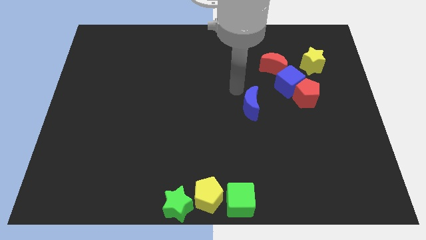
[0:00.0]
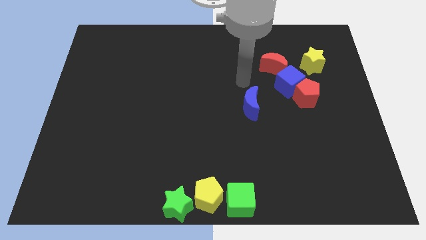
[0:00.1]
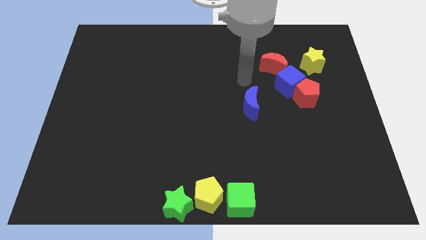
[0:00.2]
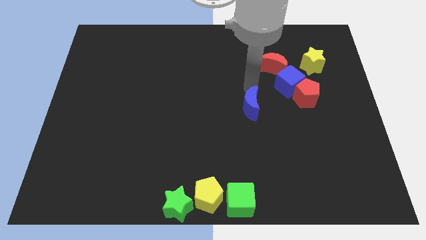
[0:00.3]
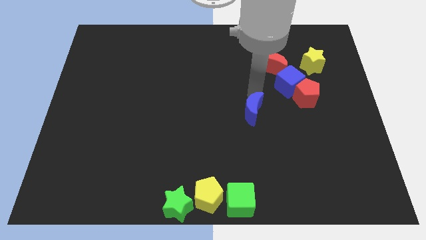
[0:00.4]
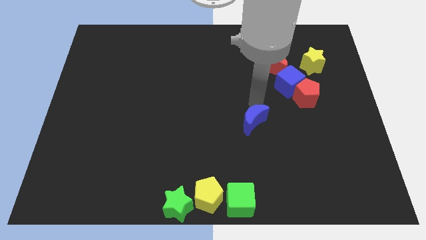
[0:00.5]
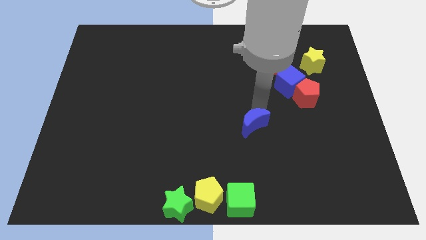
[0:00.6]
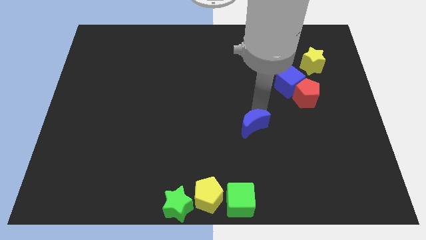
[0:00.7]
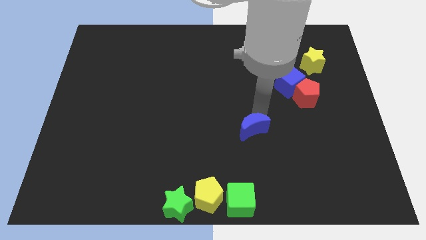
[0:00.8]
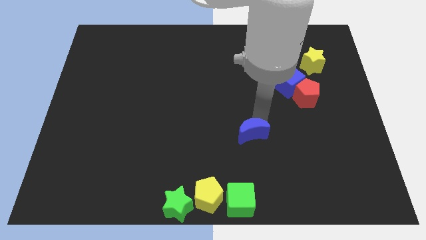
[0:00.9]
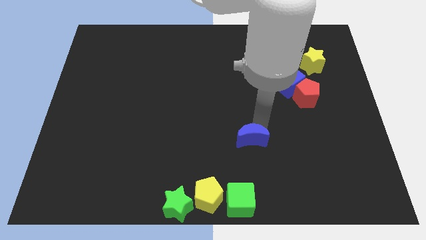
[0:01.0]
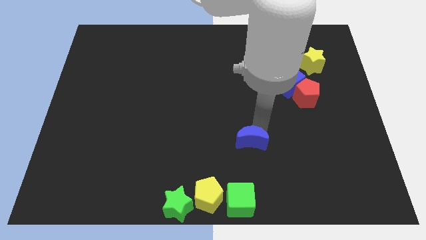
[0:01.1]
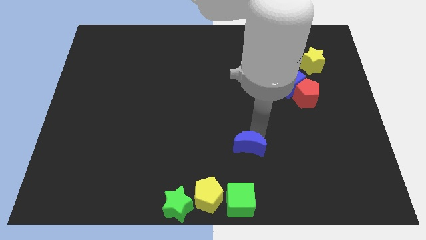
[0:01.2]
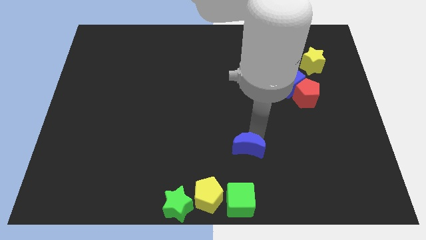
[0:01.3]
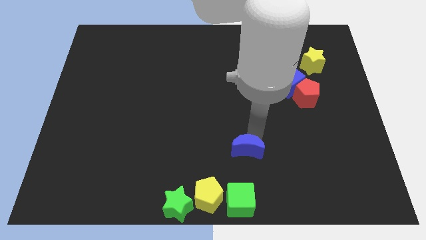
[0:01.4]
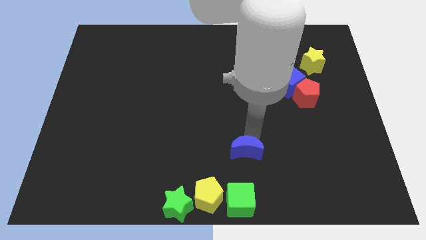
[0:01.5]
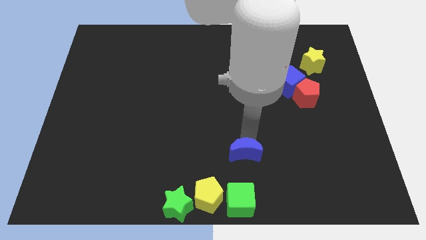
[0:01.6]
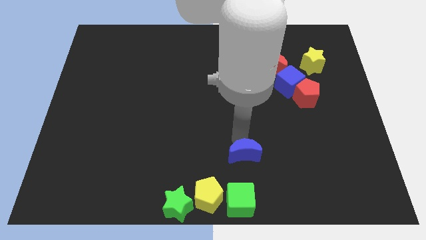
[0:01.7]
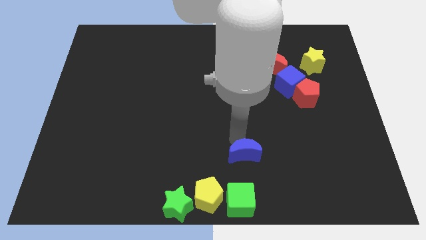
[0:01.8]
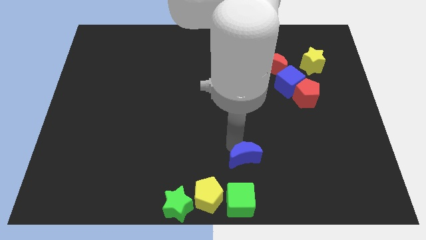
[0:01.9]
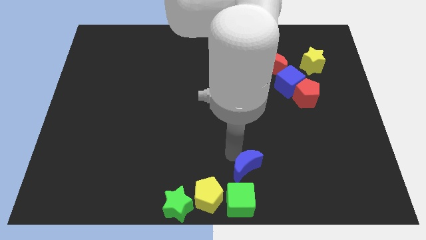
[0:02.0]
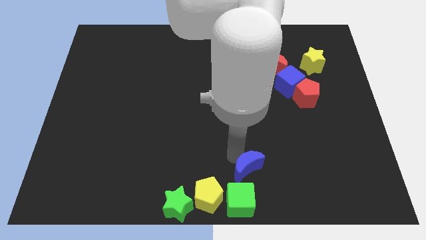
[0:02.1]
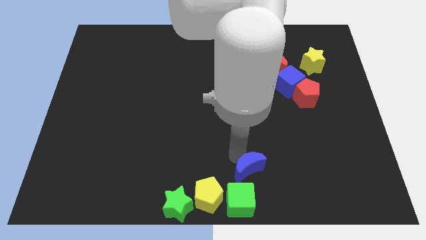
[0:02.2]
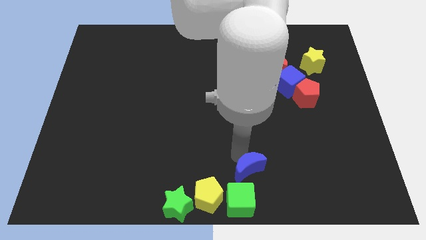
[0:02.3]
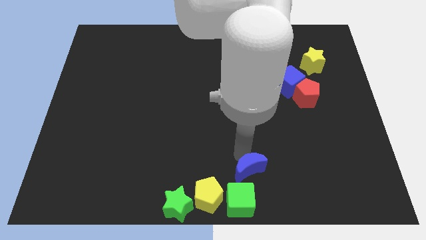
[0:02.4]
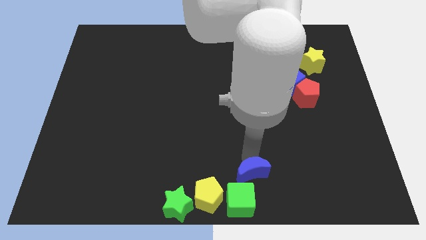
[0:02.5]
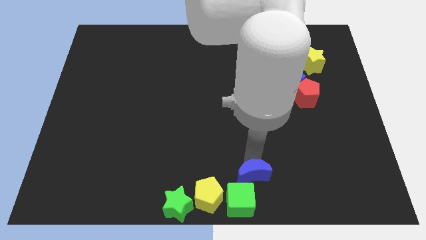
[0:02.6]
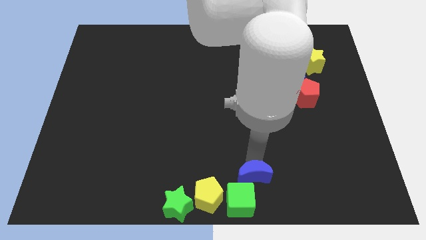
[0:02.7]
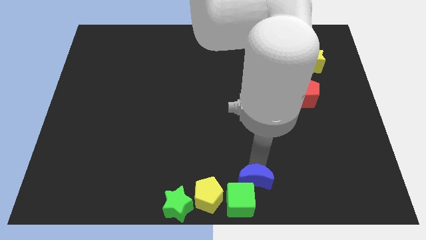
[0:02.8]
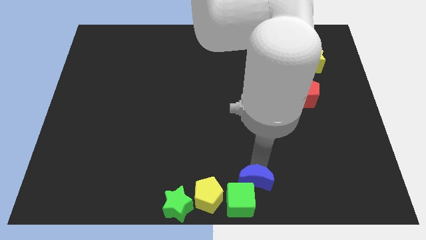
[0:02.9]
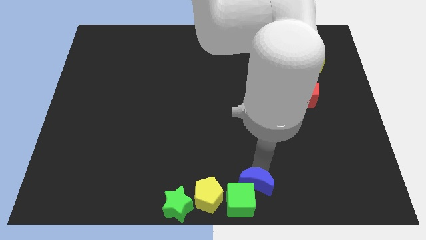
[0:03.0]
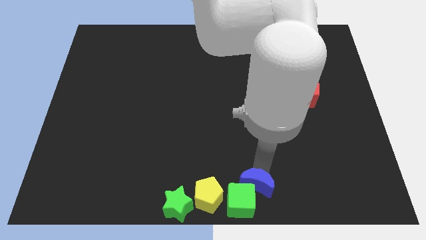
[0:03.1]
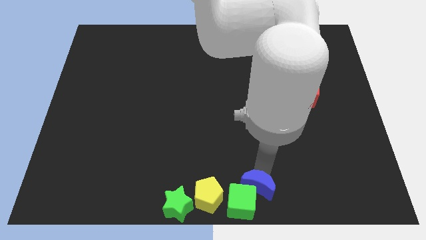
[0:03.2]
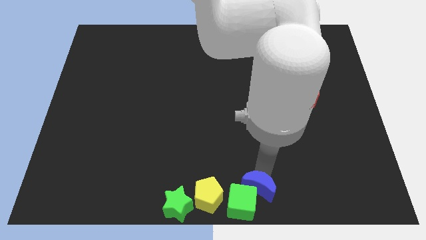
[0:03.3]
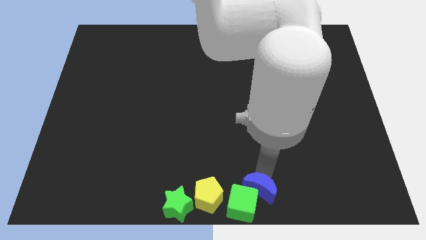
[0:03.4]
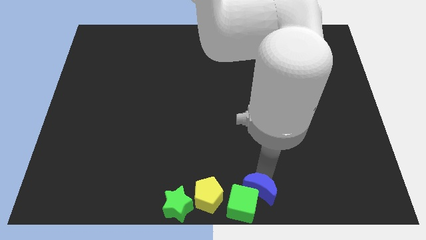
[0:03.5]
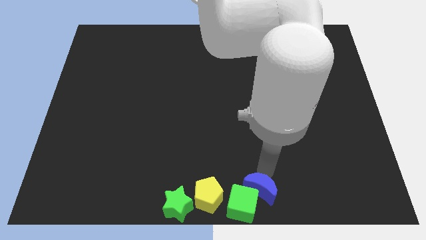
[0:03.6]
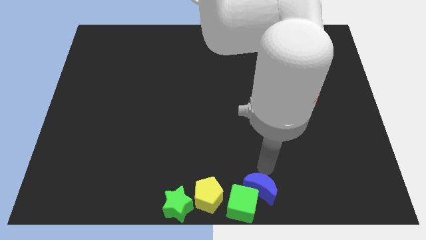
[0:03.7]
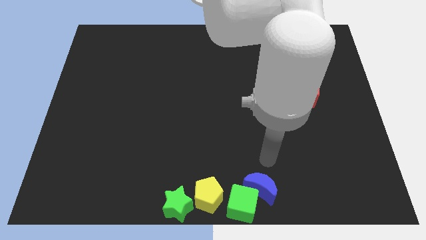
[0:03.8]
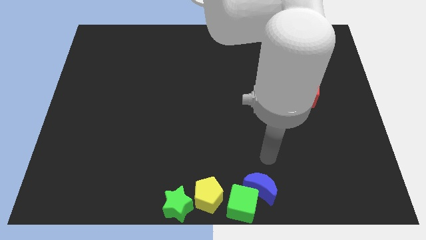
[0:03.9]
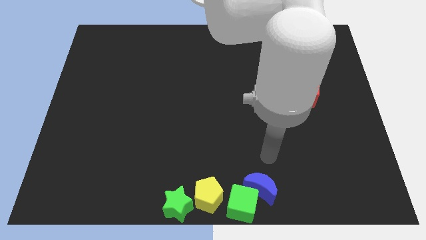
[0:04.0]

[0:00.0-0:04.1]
slide the blue moon into the green cube

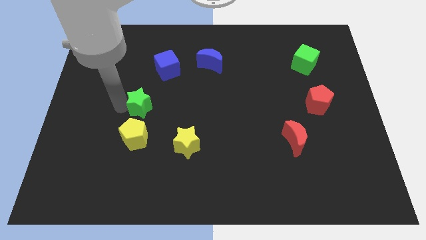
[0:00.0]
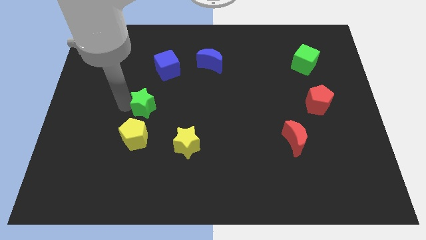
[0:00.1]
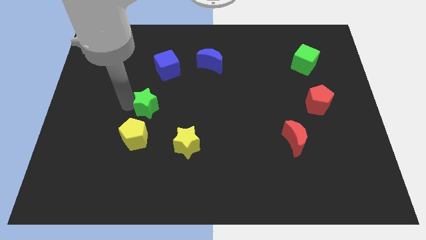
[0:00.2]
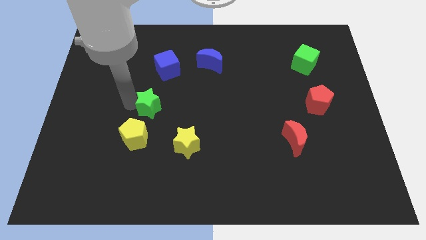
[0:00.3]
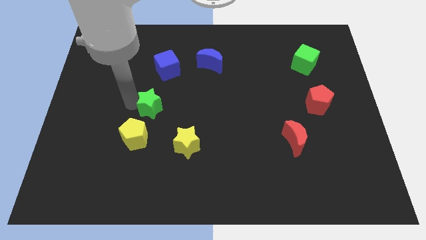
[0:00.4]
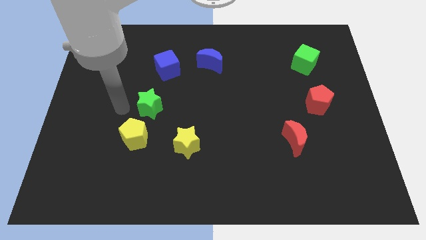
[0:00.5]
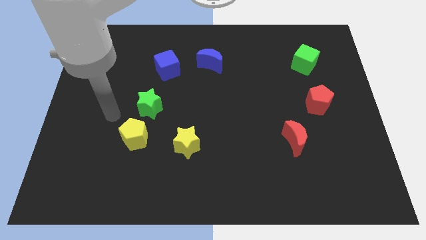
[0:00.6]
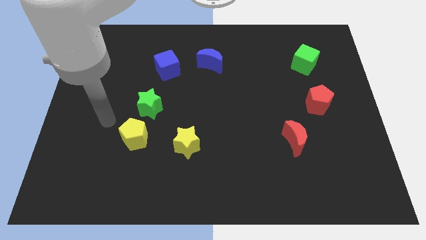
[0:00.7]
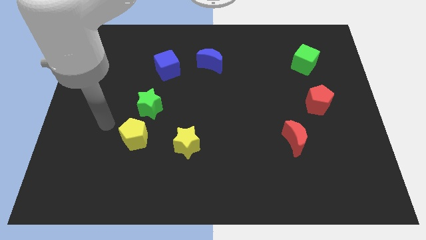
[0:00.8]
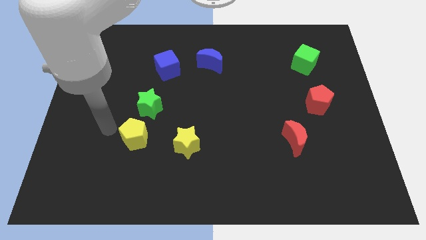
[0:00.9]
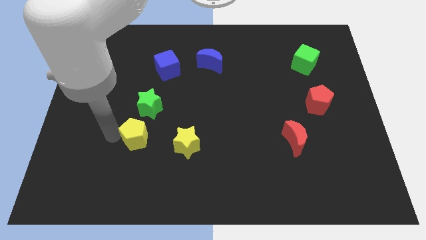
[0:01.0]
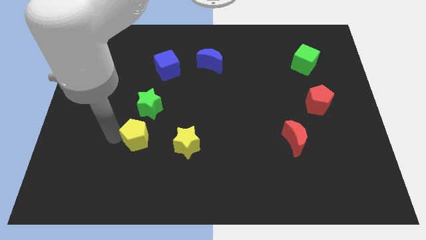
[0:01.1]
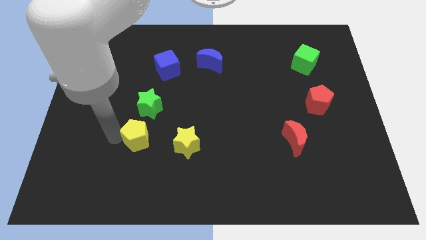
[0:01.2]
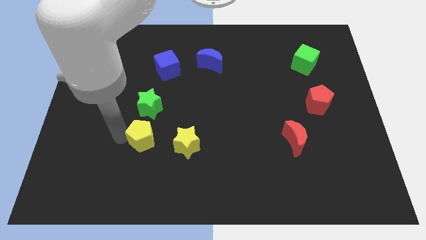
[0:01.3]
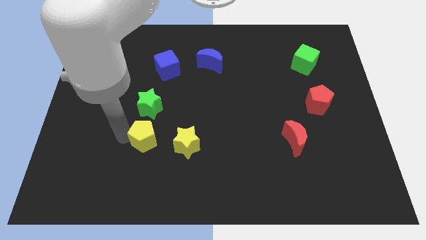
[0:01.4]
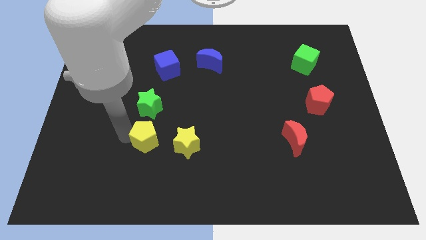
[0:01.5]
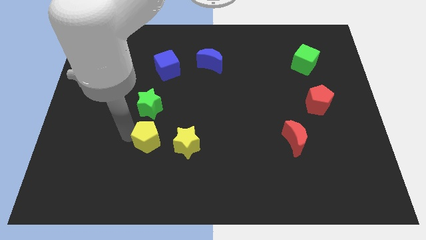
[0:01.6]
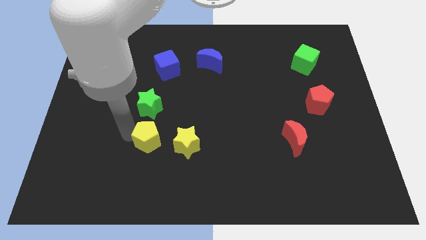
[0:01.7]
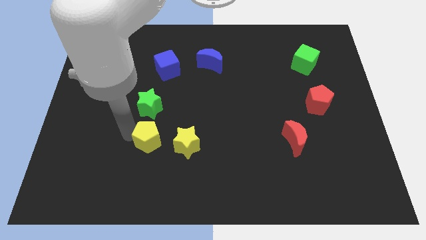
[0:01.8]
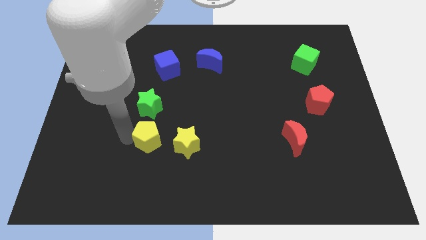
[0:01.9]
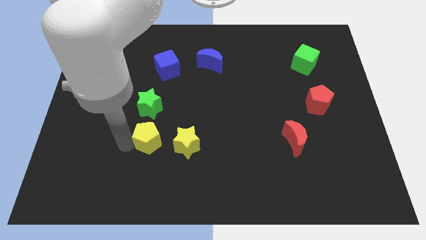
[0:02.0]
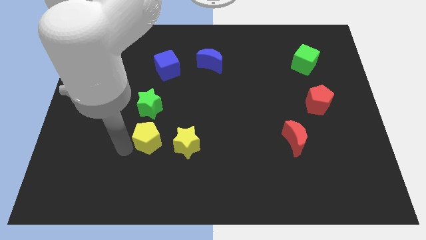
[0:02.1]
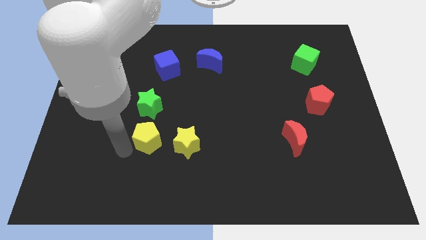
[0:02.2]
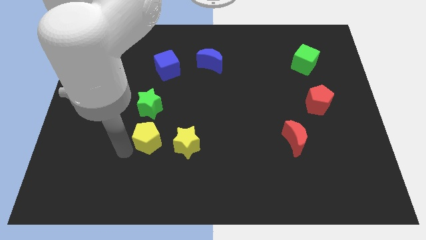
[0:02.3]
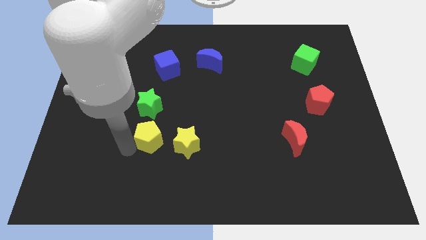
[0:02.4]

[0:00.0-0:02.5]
place yellow pentagon below green star

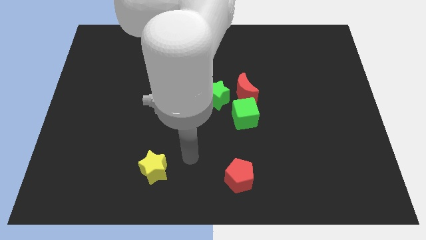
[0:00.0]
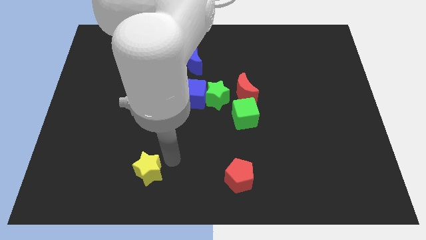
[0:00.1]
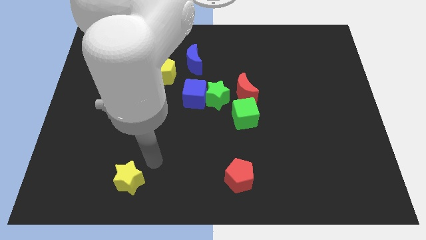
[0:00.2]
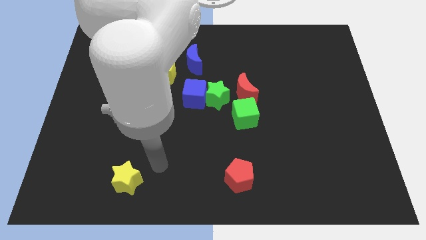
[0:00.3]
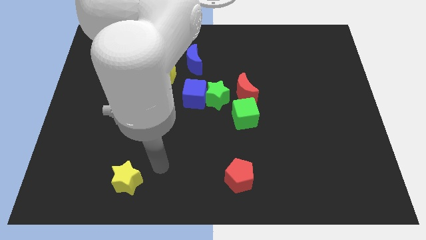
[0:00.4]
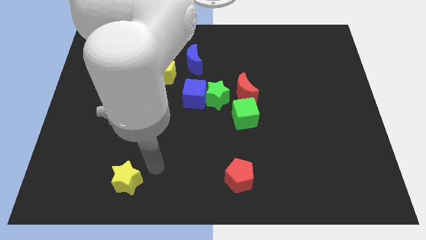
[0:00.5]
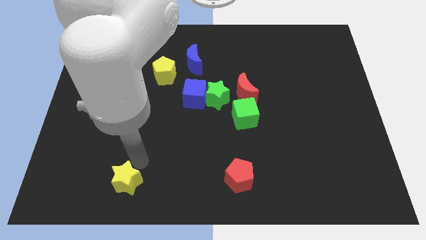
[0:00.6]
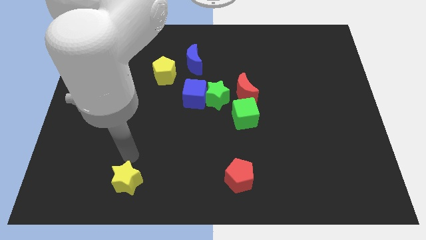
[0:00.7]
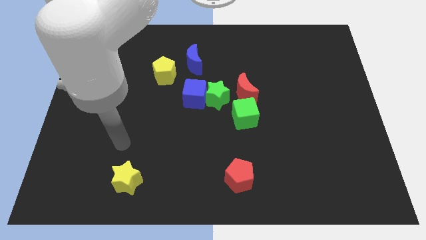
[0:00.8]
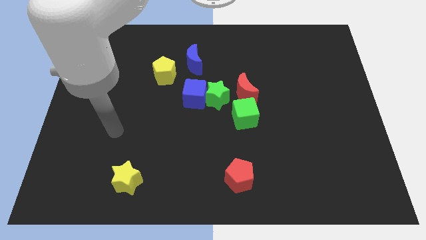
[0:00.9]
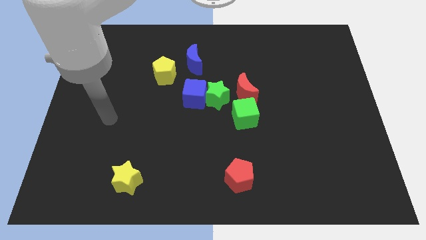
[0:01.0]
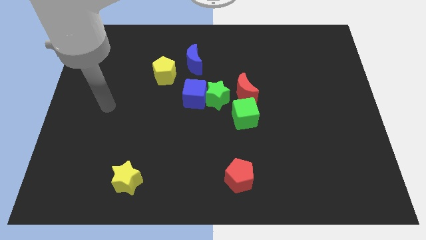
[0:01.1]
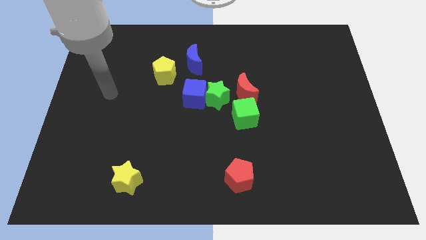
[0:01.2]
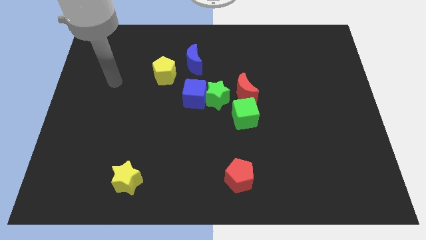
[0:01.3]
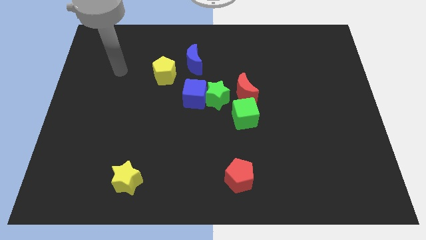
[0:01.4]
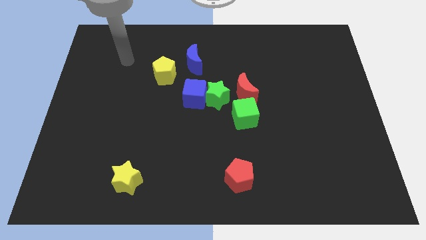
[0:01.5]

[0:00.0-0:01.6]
move the yellow star towards the bottom left of the board

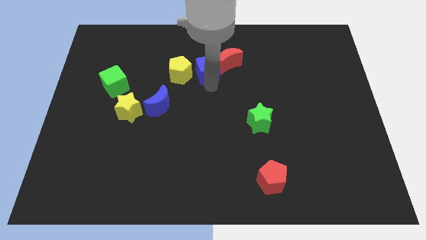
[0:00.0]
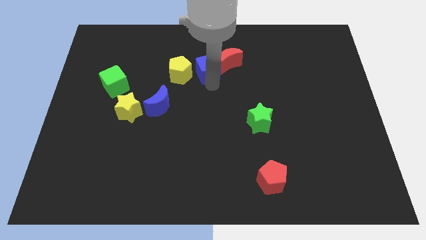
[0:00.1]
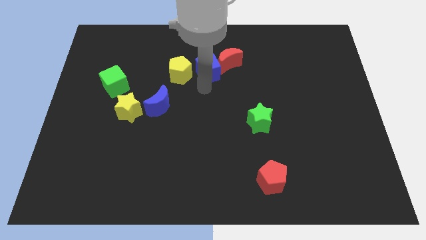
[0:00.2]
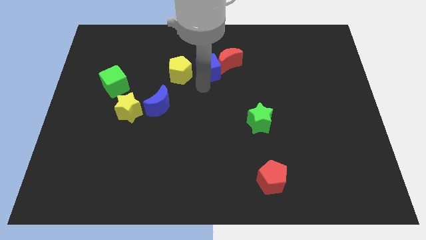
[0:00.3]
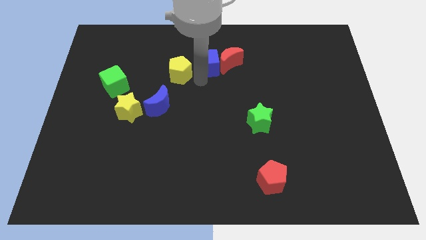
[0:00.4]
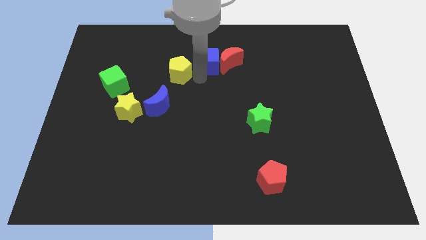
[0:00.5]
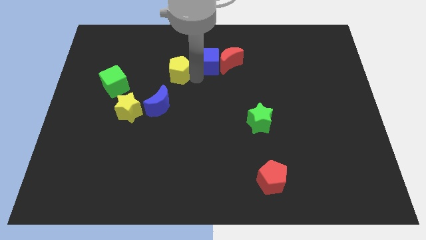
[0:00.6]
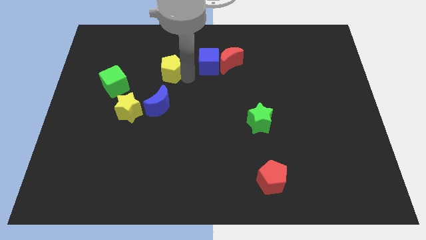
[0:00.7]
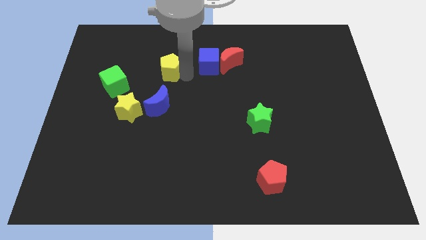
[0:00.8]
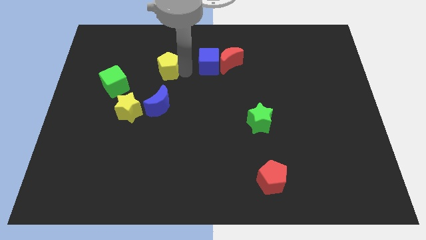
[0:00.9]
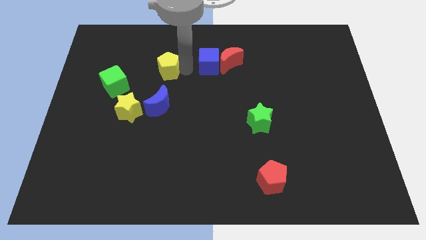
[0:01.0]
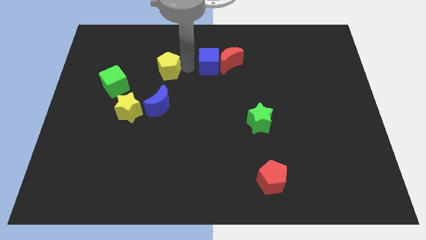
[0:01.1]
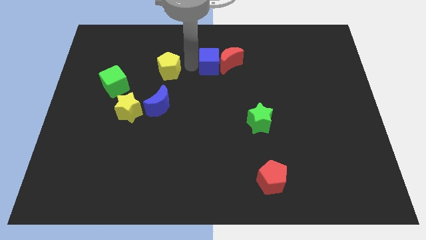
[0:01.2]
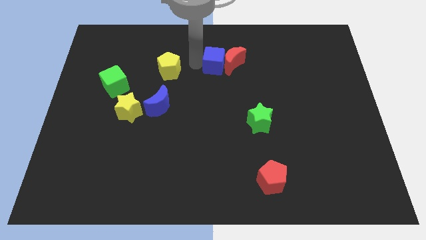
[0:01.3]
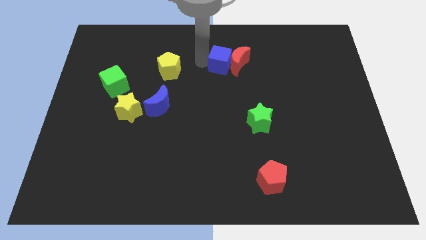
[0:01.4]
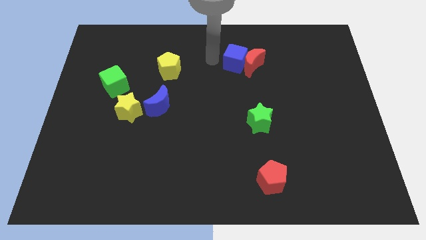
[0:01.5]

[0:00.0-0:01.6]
separate blue cube and yellow pentagon
